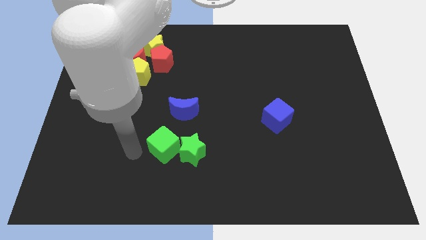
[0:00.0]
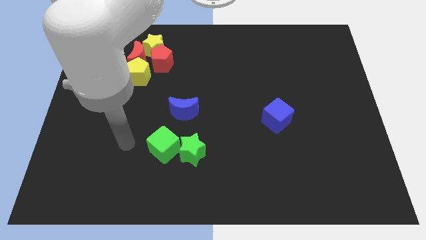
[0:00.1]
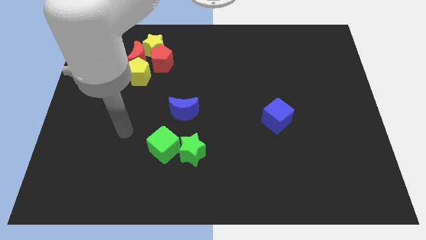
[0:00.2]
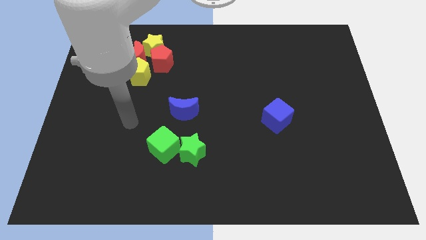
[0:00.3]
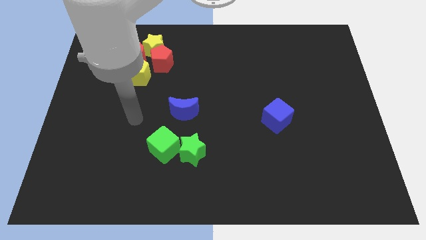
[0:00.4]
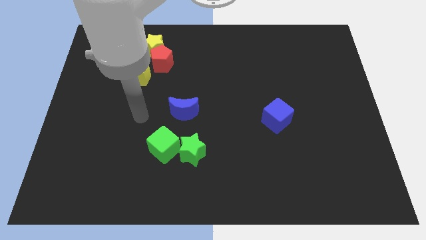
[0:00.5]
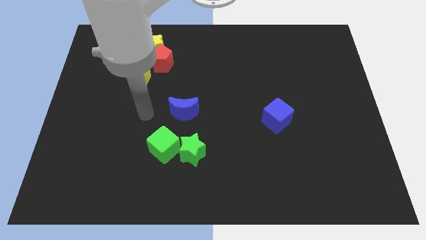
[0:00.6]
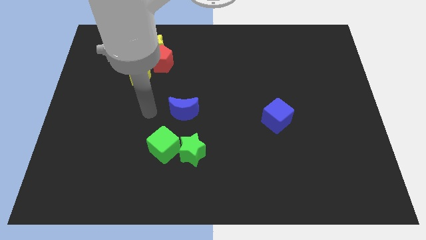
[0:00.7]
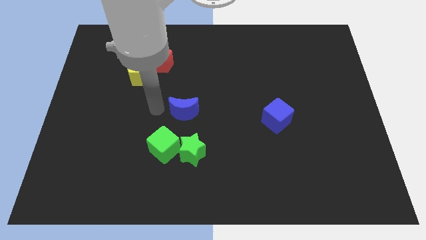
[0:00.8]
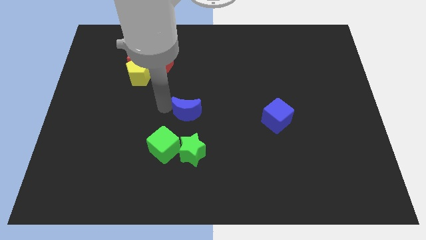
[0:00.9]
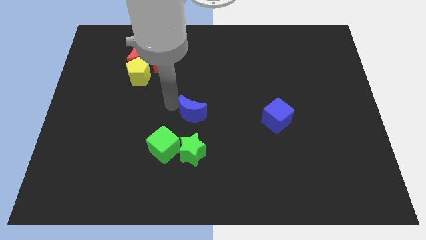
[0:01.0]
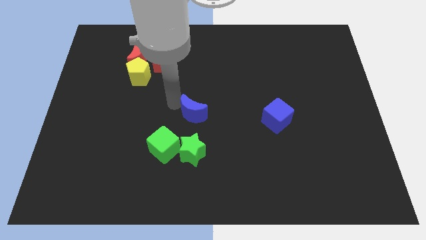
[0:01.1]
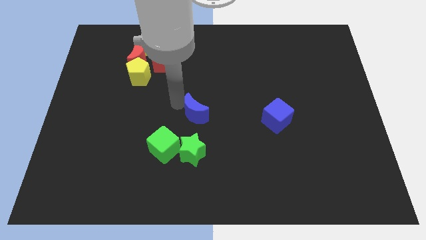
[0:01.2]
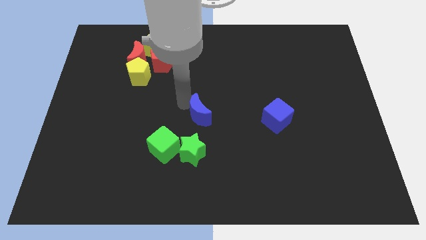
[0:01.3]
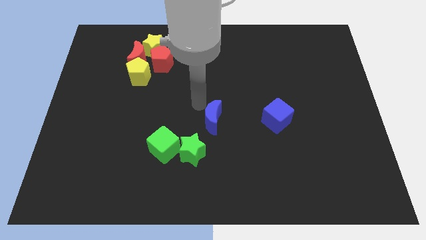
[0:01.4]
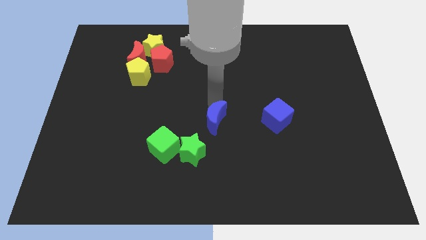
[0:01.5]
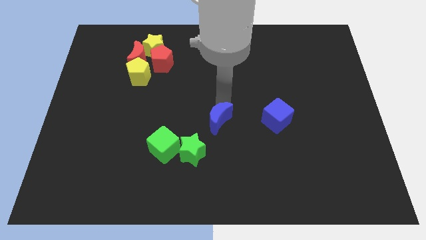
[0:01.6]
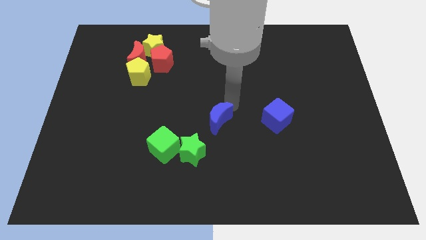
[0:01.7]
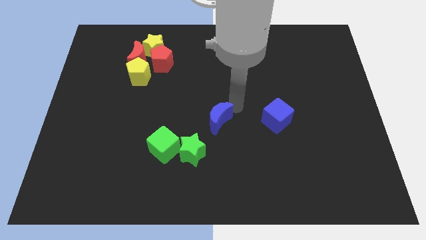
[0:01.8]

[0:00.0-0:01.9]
push the blue moon slightly to the center of the board

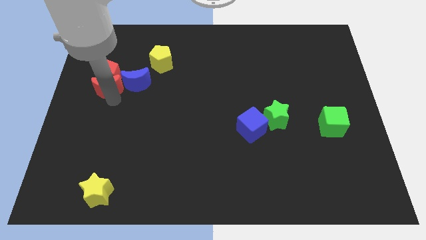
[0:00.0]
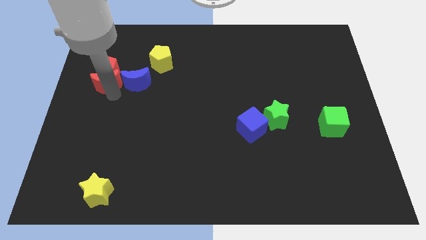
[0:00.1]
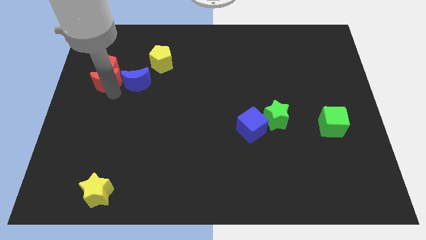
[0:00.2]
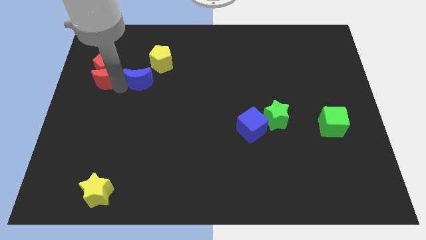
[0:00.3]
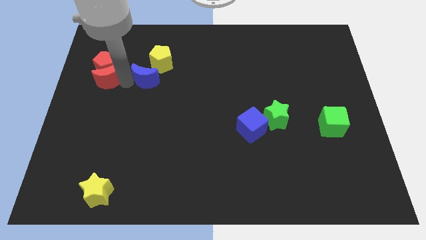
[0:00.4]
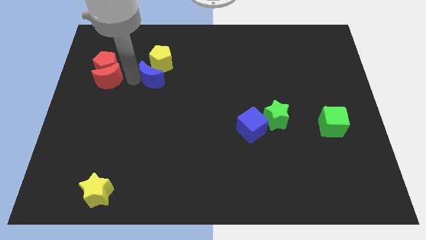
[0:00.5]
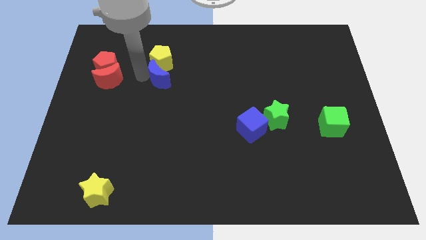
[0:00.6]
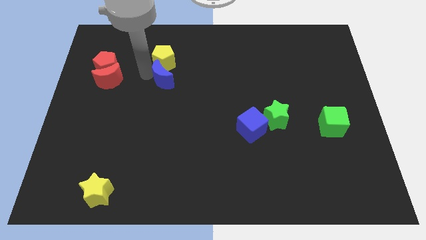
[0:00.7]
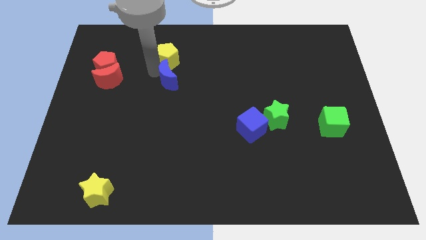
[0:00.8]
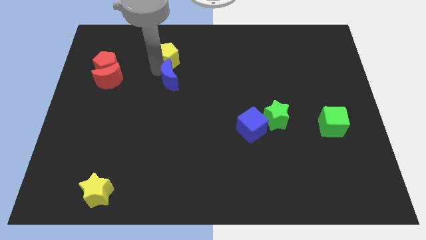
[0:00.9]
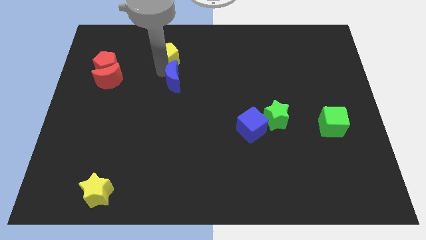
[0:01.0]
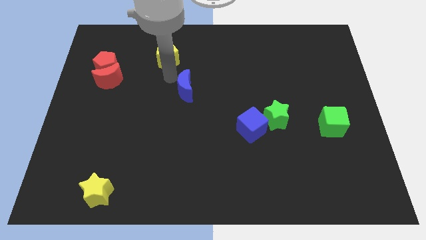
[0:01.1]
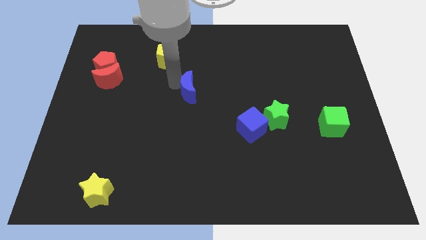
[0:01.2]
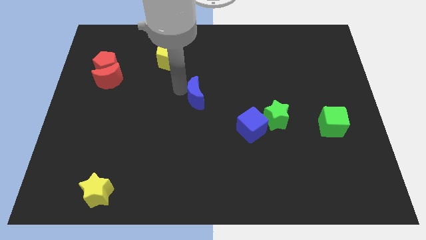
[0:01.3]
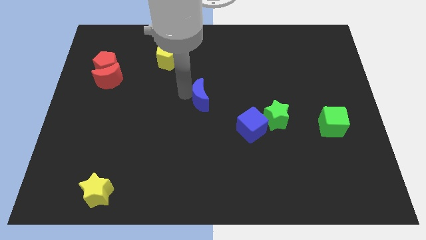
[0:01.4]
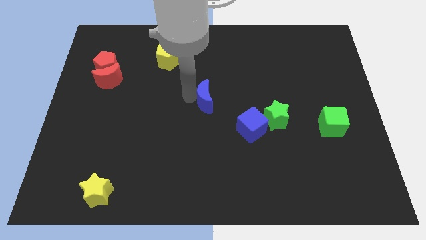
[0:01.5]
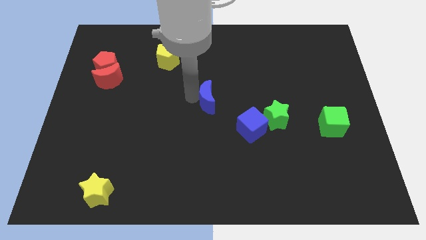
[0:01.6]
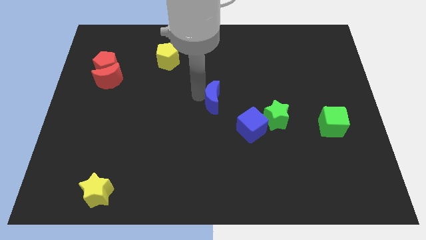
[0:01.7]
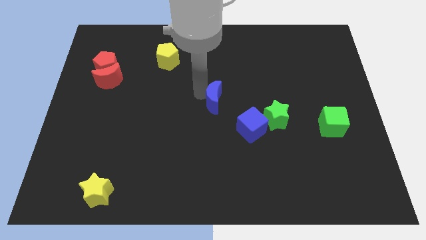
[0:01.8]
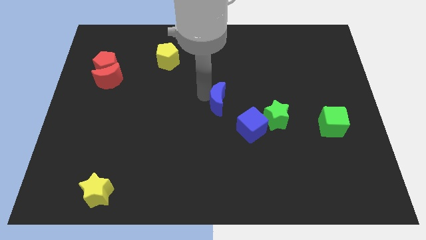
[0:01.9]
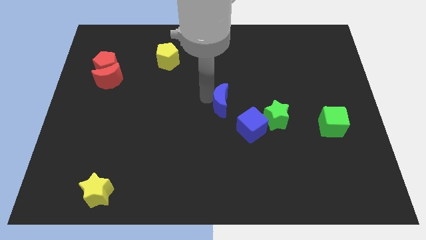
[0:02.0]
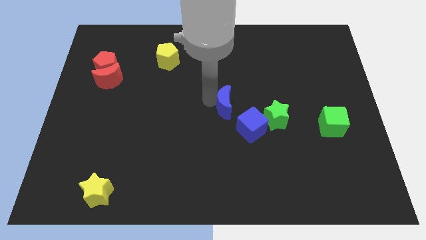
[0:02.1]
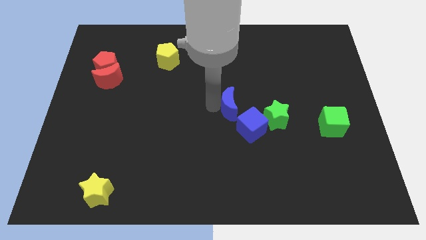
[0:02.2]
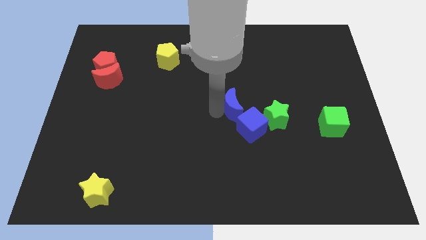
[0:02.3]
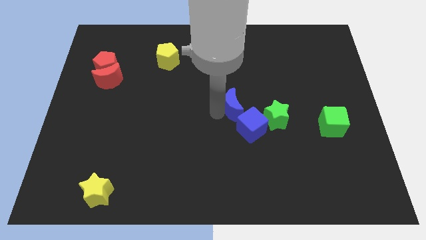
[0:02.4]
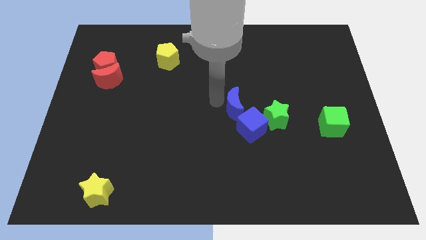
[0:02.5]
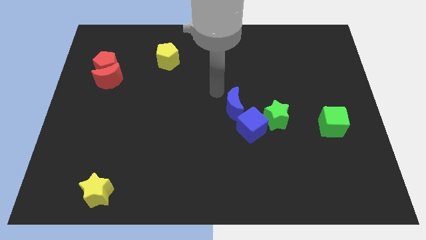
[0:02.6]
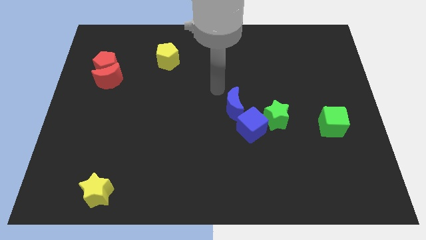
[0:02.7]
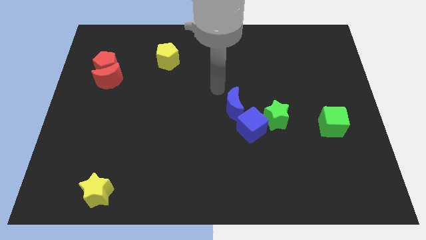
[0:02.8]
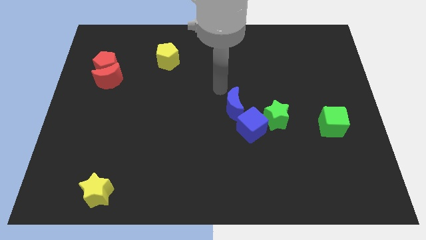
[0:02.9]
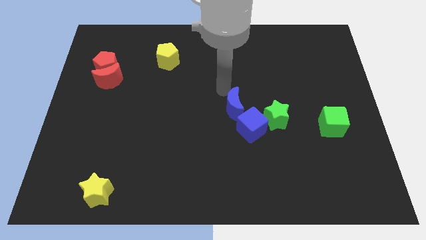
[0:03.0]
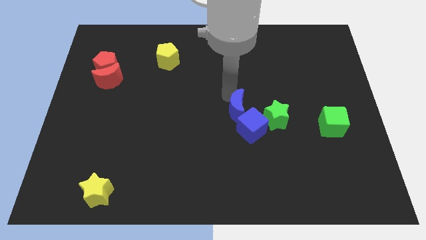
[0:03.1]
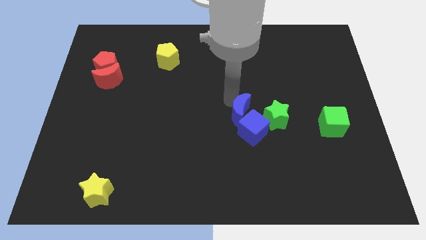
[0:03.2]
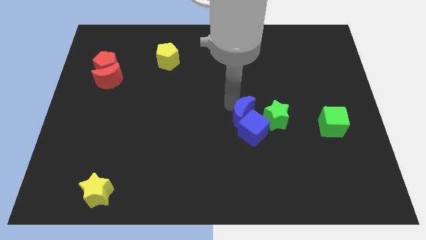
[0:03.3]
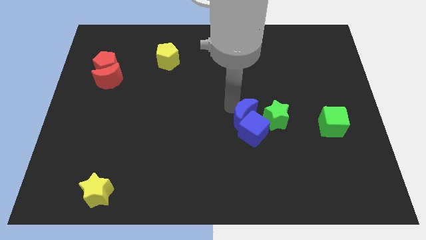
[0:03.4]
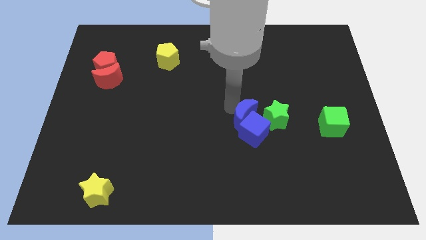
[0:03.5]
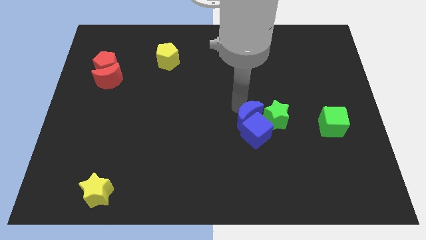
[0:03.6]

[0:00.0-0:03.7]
place the blue crescent into blue cube

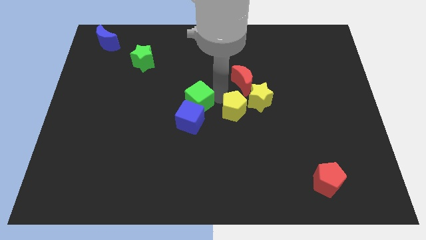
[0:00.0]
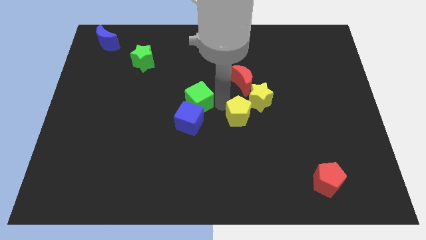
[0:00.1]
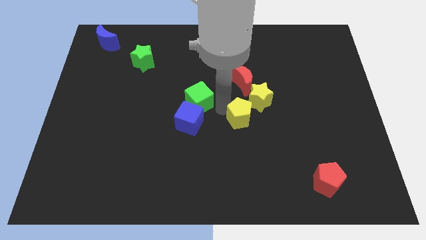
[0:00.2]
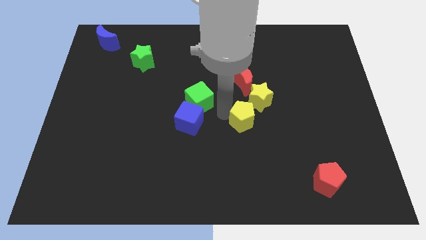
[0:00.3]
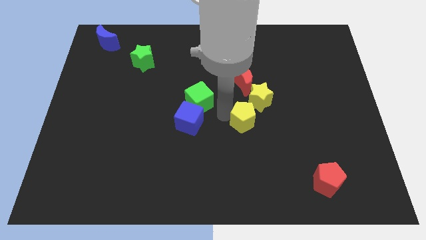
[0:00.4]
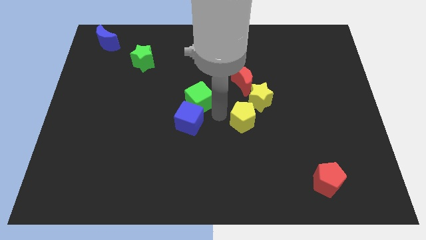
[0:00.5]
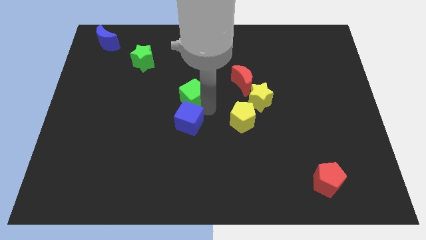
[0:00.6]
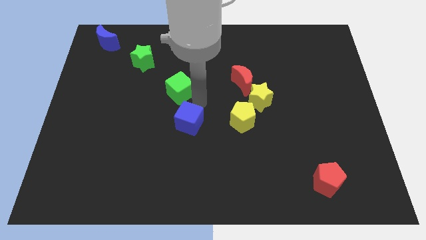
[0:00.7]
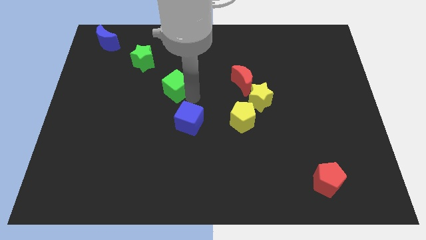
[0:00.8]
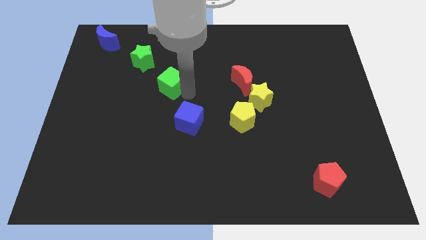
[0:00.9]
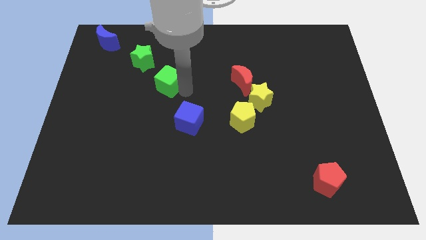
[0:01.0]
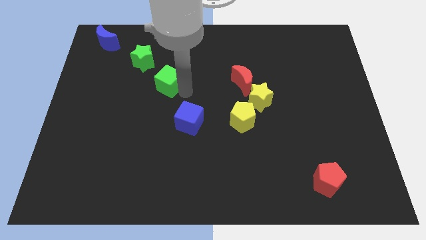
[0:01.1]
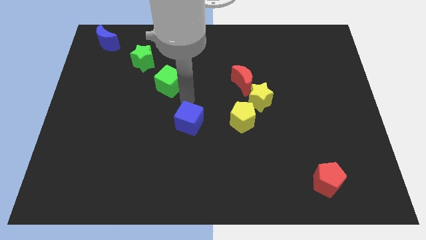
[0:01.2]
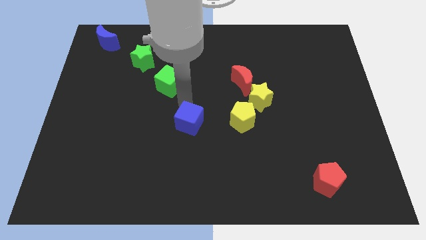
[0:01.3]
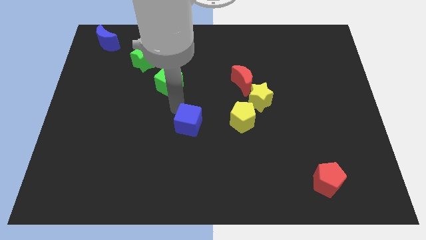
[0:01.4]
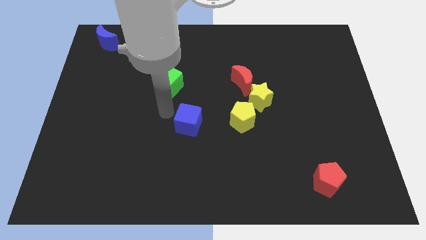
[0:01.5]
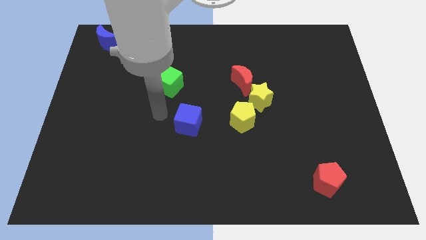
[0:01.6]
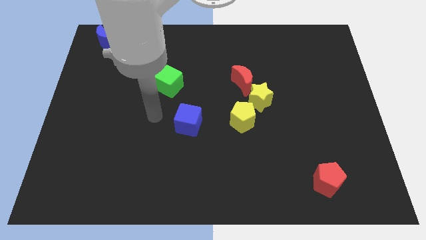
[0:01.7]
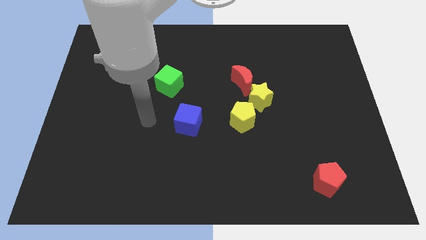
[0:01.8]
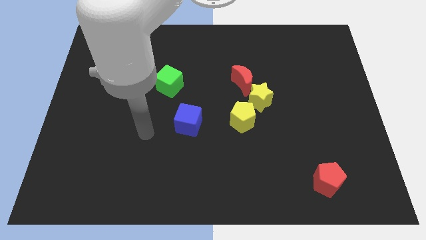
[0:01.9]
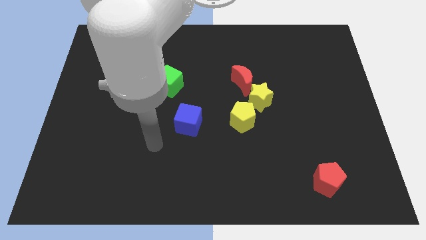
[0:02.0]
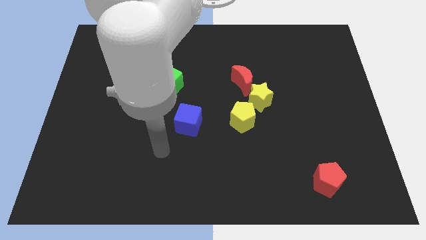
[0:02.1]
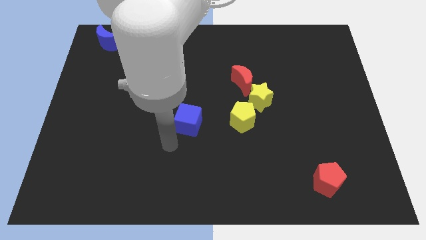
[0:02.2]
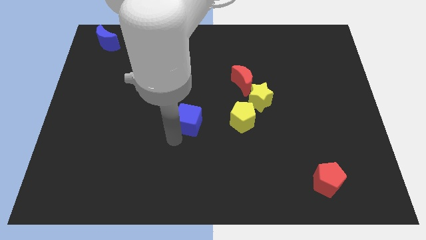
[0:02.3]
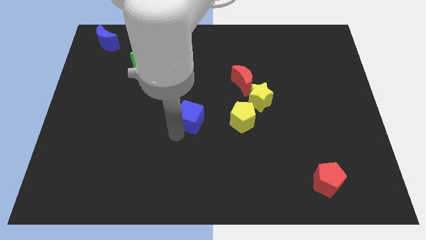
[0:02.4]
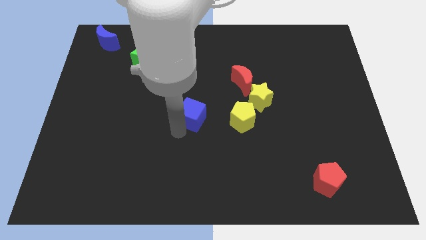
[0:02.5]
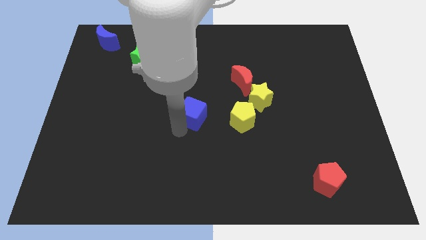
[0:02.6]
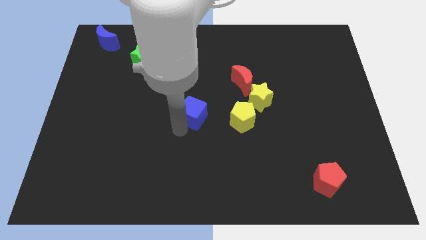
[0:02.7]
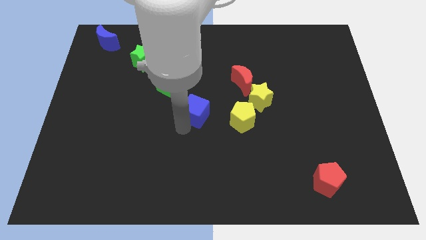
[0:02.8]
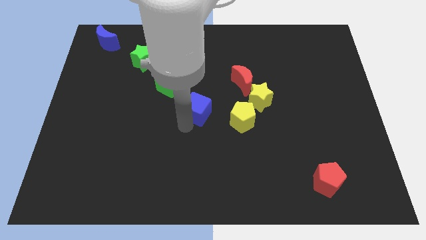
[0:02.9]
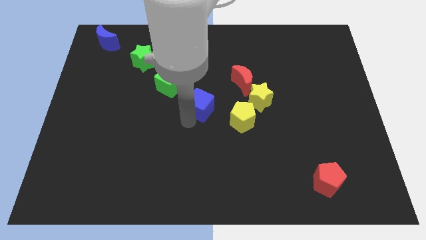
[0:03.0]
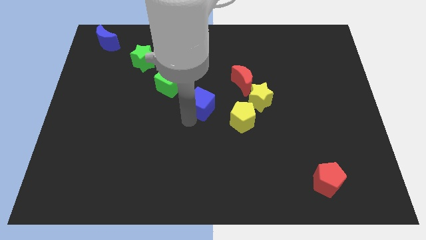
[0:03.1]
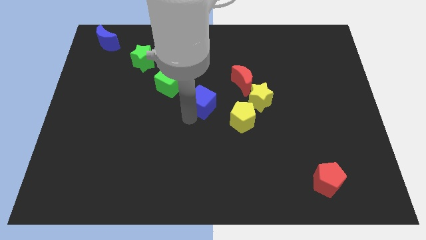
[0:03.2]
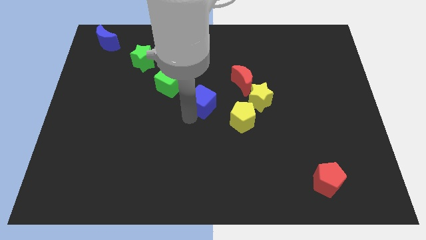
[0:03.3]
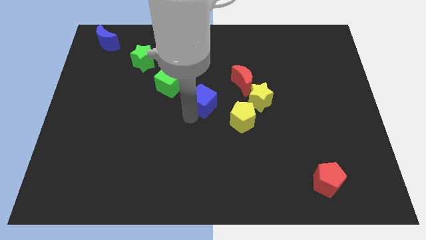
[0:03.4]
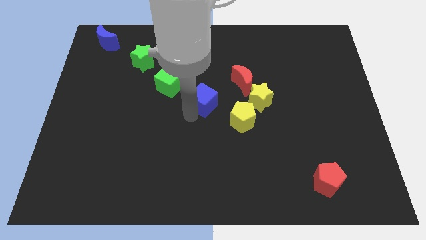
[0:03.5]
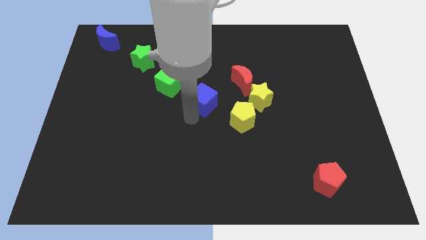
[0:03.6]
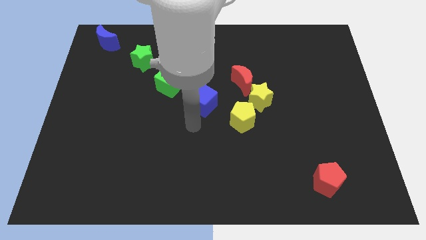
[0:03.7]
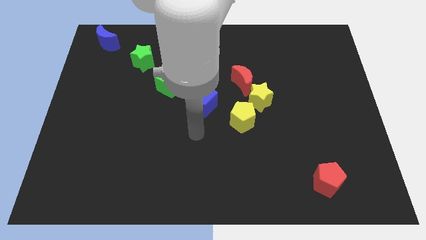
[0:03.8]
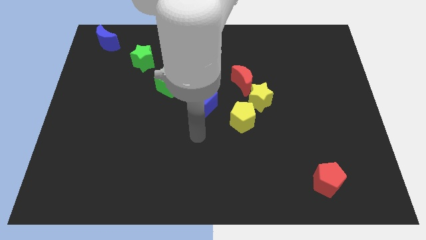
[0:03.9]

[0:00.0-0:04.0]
place blue cube in between yellow pentagon and green cube
